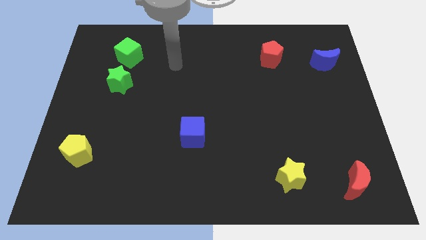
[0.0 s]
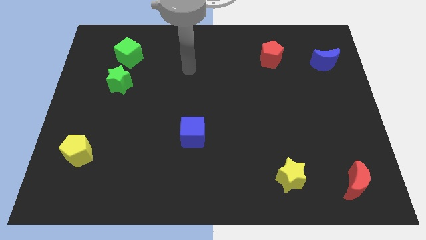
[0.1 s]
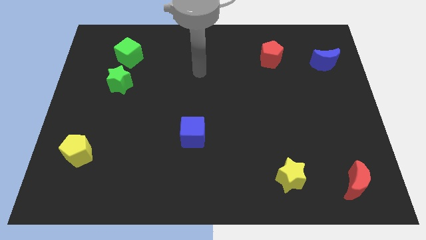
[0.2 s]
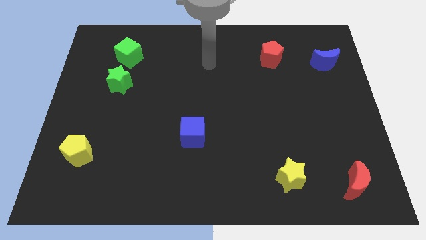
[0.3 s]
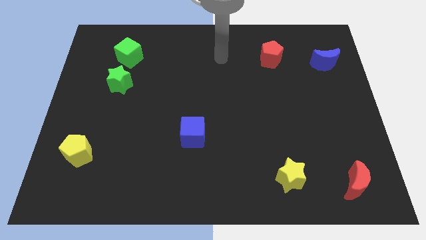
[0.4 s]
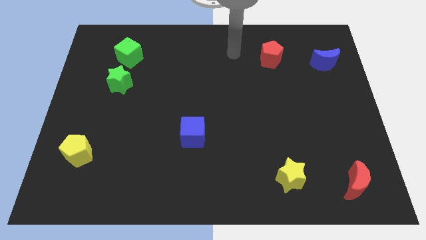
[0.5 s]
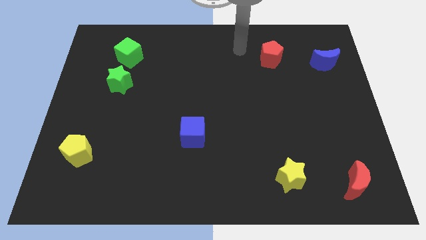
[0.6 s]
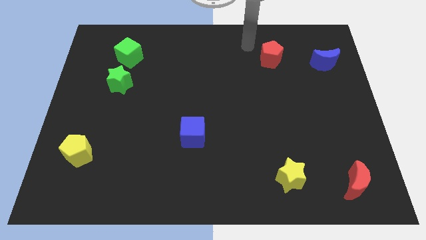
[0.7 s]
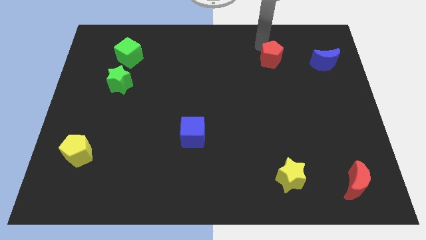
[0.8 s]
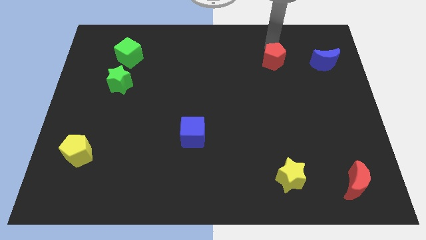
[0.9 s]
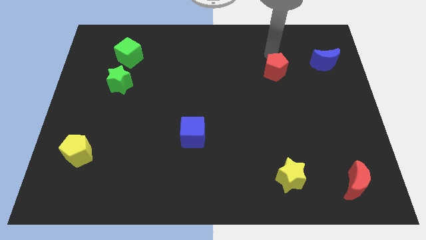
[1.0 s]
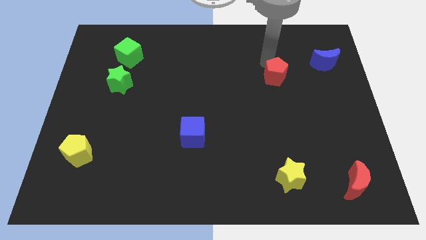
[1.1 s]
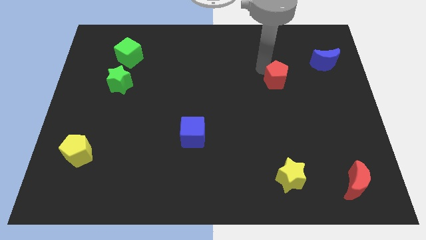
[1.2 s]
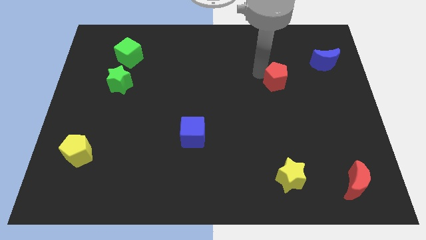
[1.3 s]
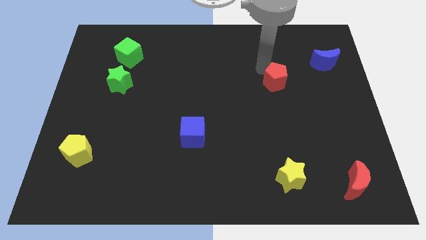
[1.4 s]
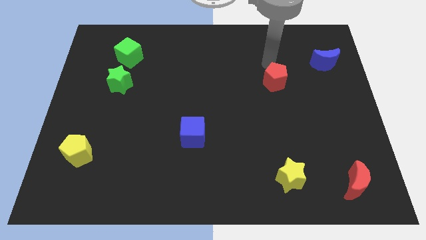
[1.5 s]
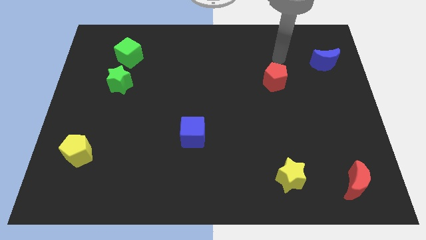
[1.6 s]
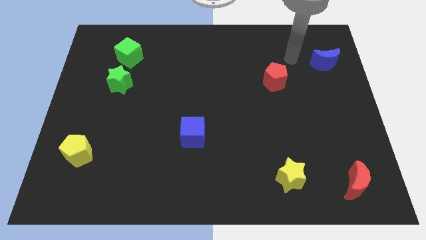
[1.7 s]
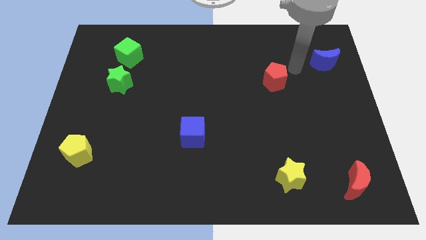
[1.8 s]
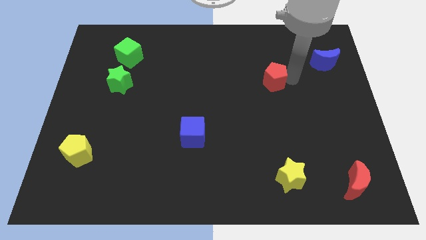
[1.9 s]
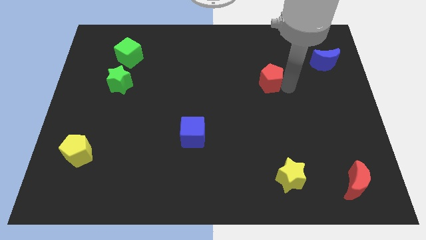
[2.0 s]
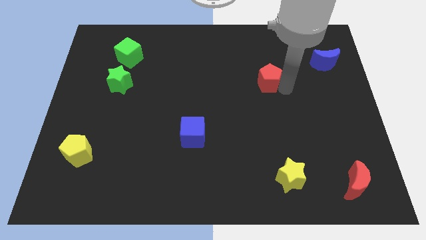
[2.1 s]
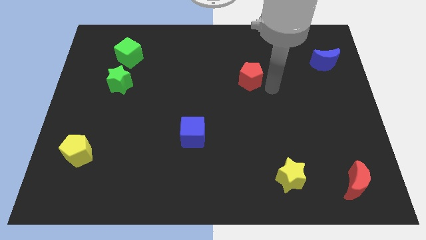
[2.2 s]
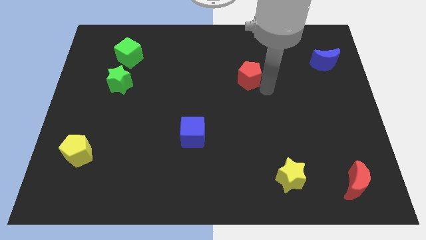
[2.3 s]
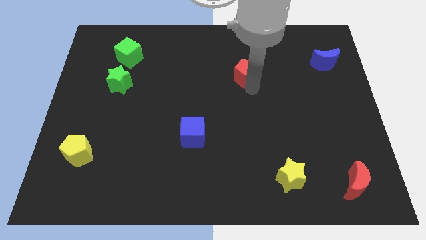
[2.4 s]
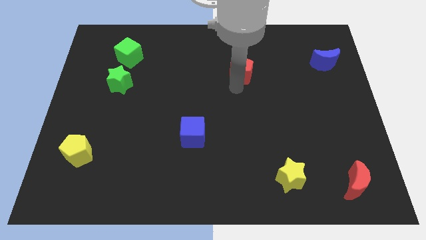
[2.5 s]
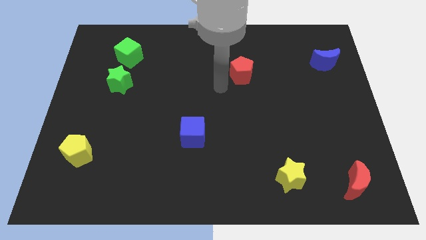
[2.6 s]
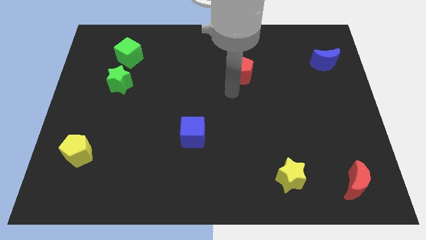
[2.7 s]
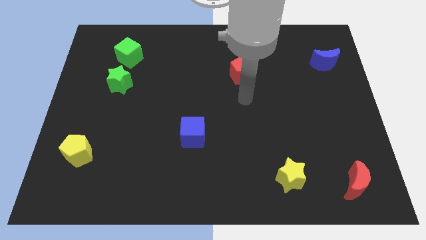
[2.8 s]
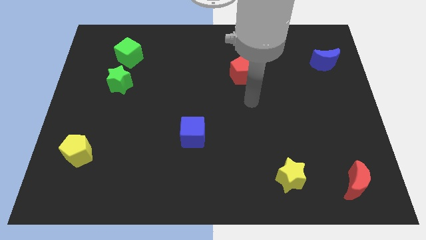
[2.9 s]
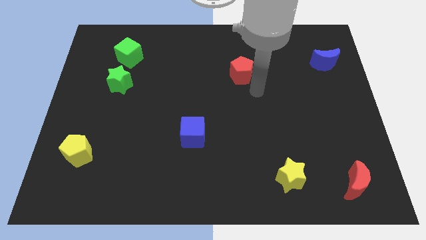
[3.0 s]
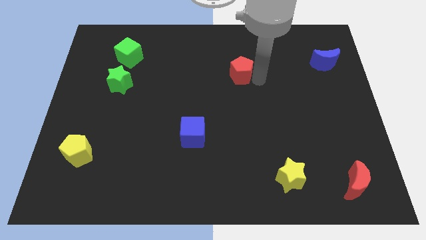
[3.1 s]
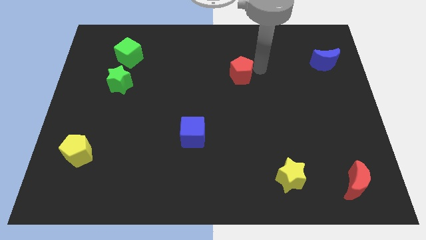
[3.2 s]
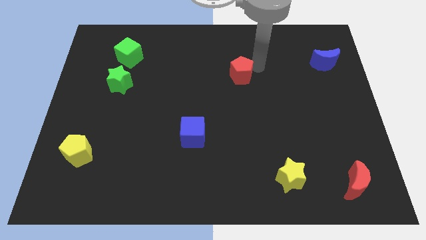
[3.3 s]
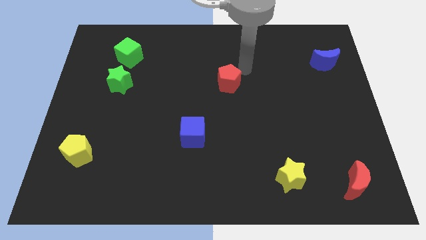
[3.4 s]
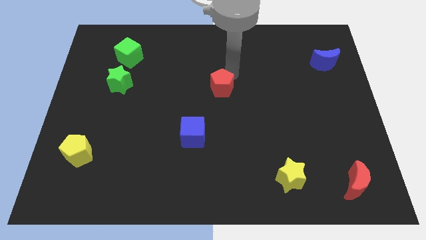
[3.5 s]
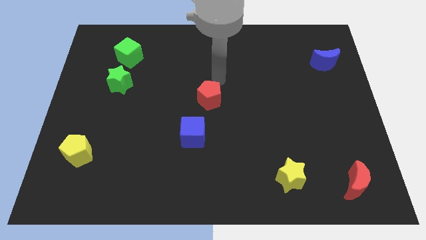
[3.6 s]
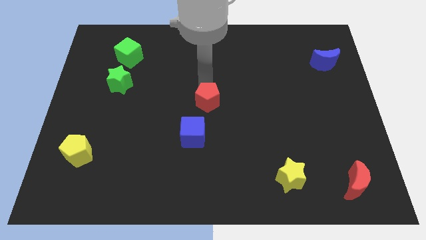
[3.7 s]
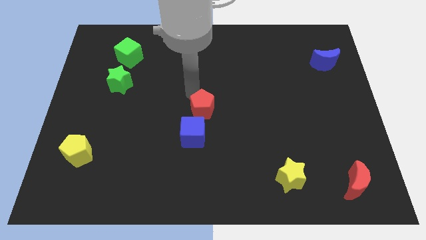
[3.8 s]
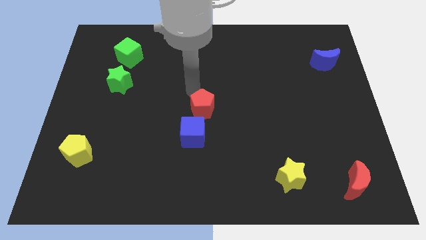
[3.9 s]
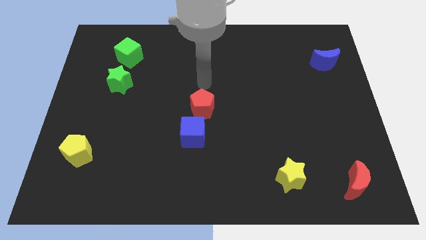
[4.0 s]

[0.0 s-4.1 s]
place the red pentagon above the blue cube

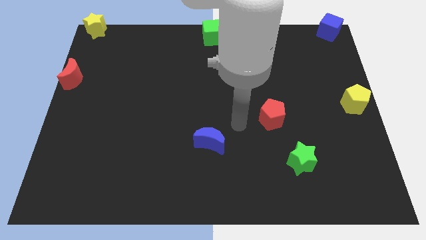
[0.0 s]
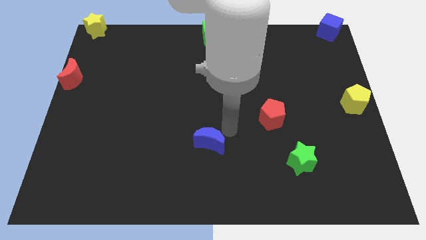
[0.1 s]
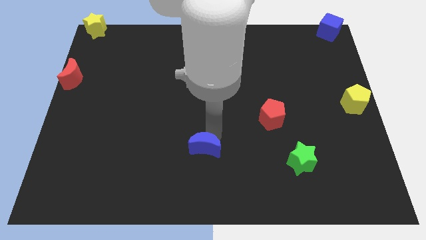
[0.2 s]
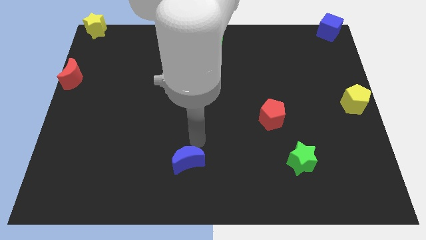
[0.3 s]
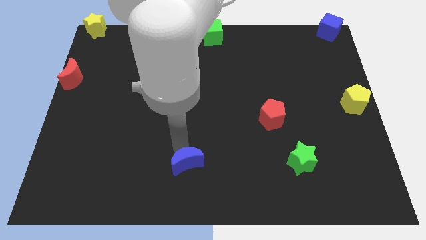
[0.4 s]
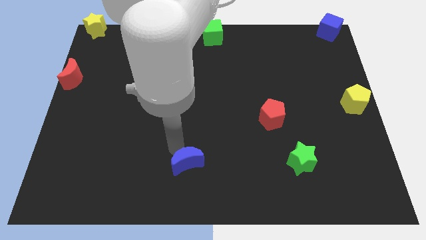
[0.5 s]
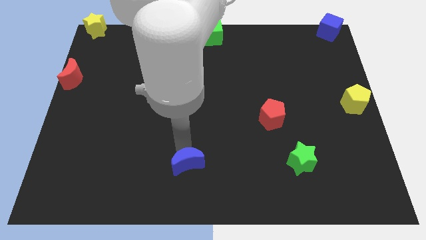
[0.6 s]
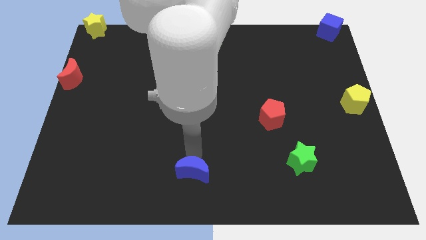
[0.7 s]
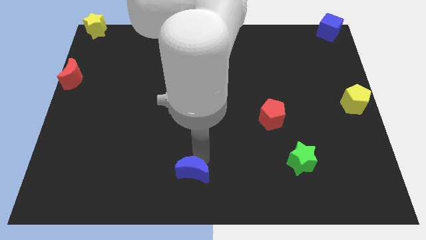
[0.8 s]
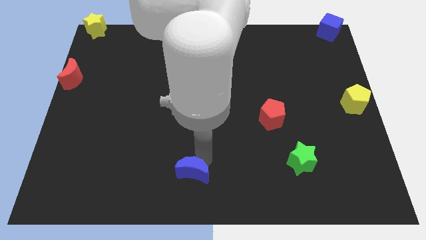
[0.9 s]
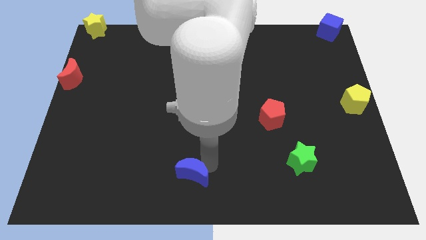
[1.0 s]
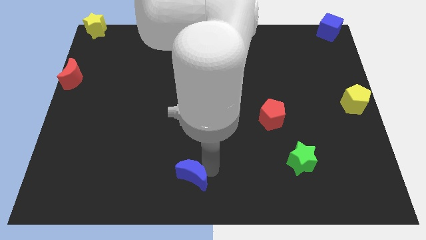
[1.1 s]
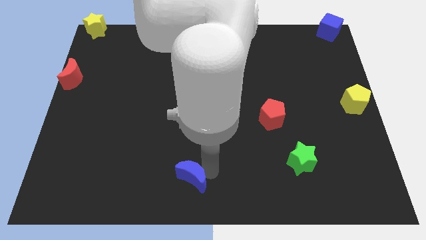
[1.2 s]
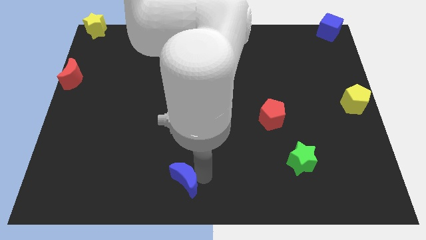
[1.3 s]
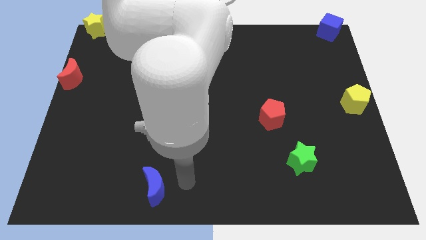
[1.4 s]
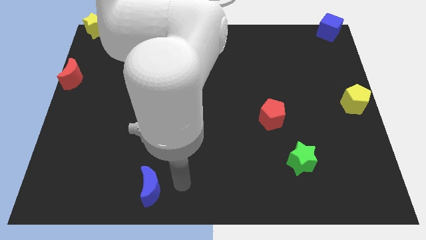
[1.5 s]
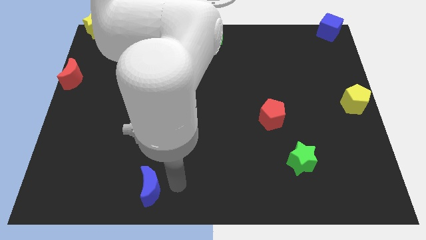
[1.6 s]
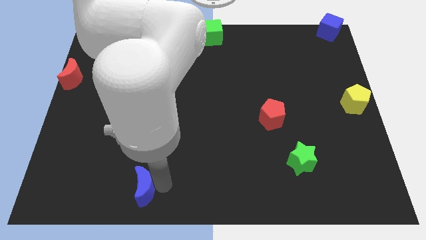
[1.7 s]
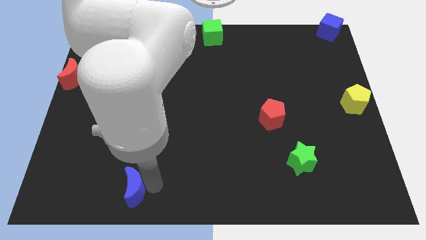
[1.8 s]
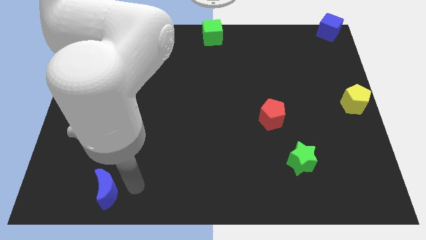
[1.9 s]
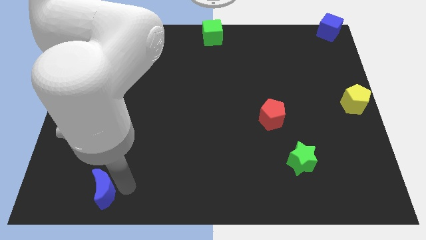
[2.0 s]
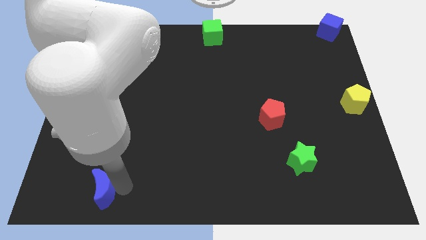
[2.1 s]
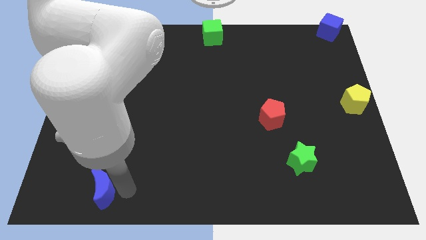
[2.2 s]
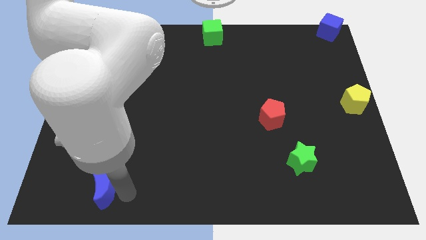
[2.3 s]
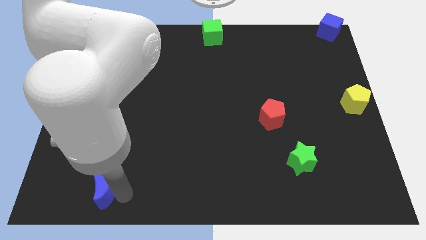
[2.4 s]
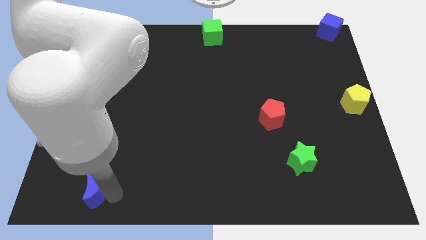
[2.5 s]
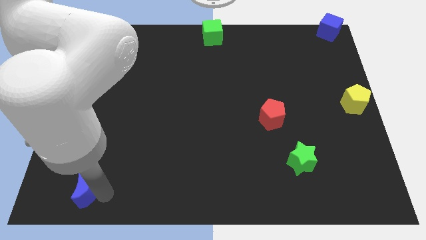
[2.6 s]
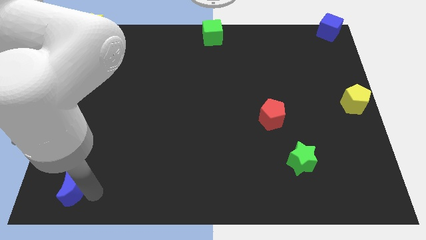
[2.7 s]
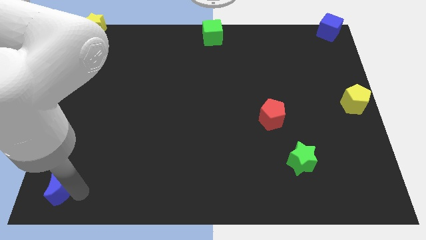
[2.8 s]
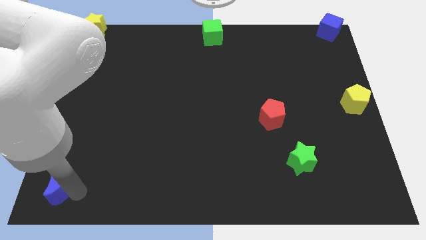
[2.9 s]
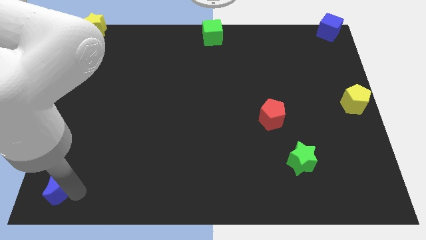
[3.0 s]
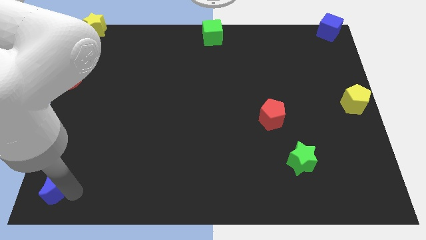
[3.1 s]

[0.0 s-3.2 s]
push the blue moon towards the bottom left corner of the board

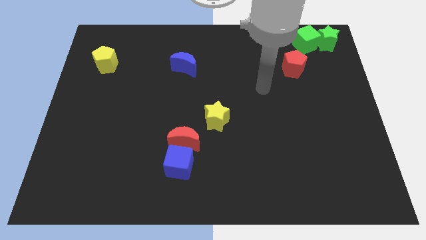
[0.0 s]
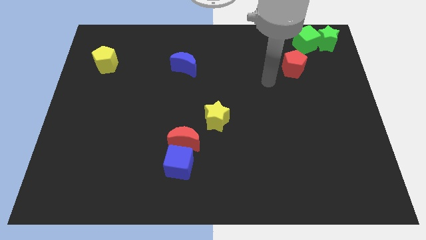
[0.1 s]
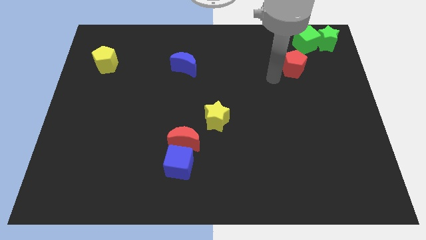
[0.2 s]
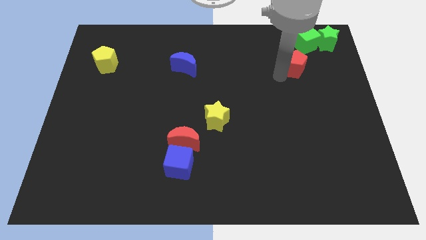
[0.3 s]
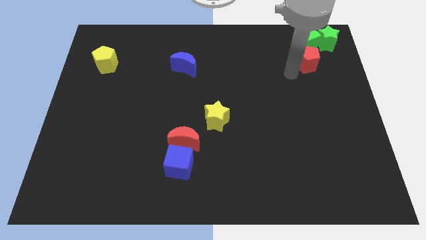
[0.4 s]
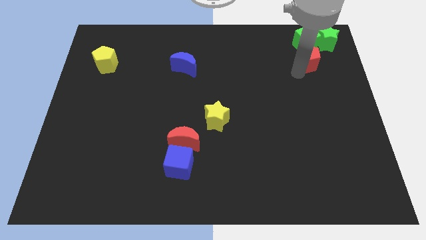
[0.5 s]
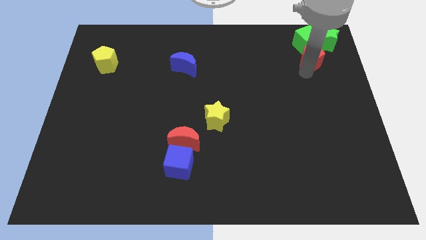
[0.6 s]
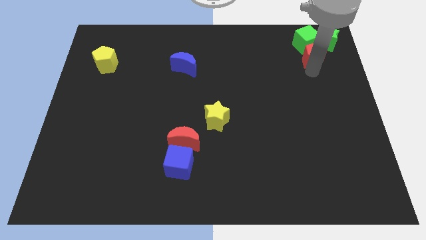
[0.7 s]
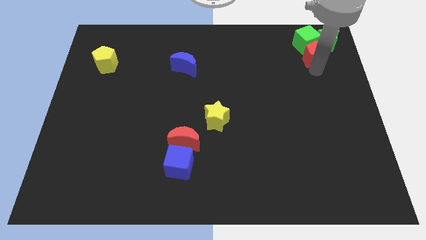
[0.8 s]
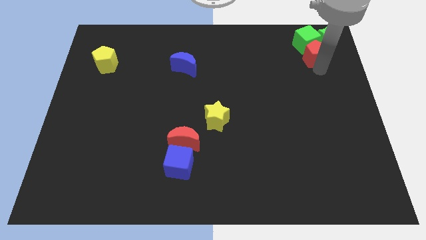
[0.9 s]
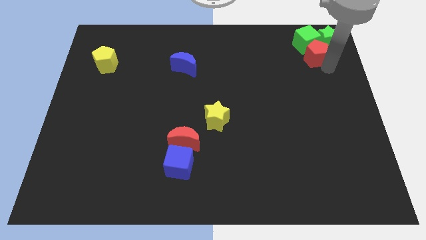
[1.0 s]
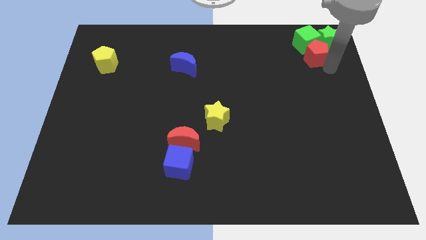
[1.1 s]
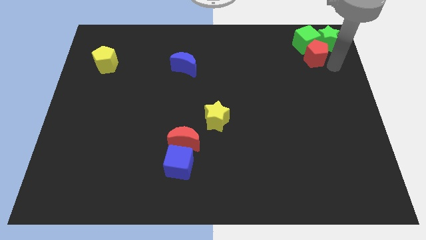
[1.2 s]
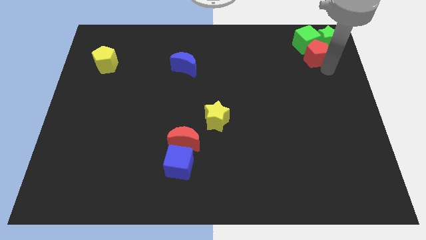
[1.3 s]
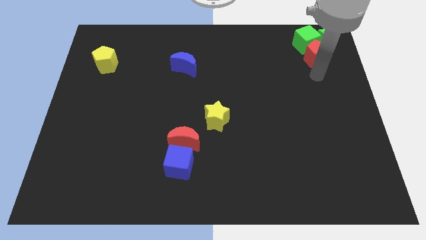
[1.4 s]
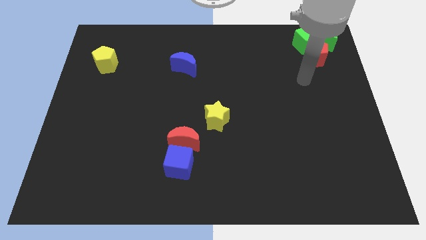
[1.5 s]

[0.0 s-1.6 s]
move the red pentagon to the bottom of the green cube
